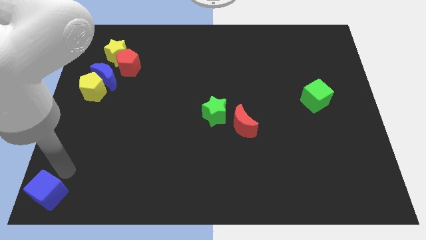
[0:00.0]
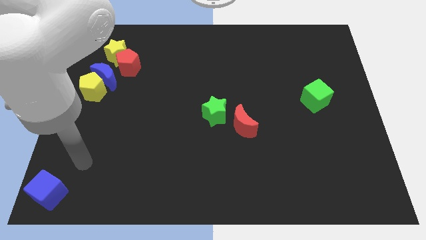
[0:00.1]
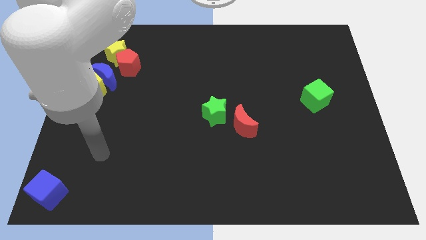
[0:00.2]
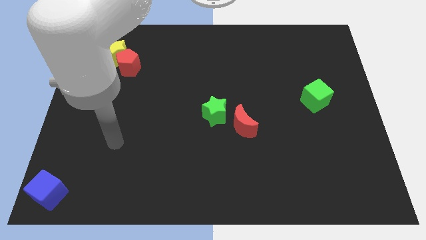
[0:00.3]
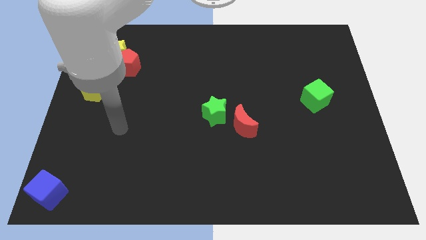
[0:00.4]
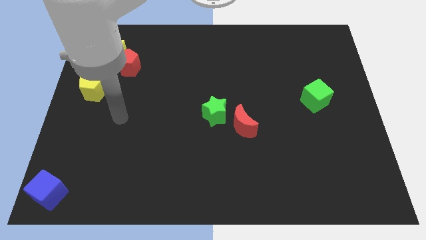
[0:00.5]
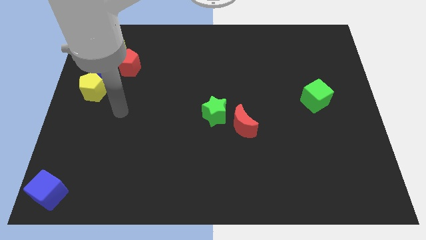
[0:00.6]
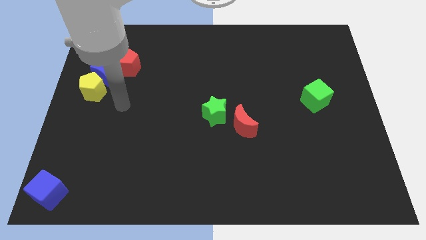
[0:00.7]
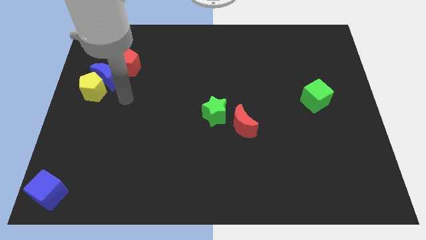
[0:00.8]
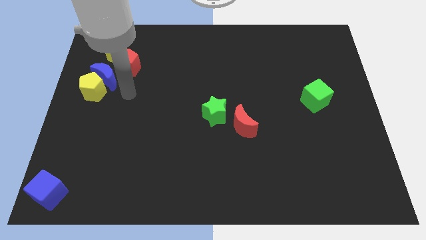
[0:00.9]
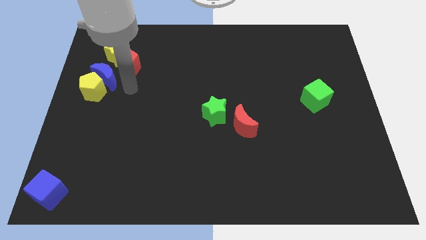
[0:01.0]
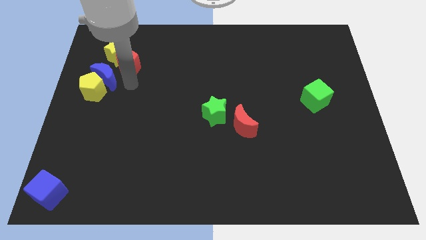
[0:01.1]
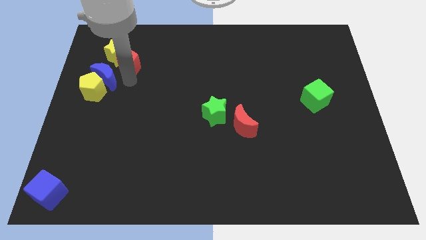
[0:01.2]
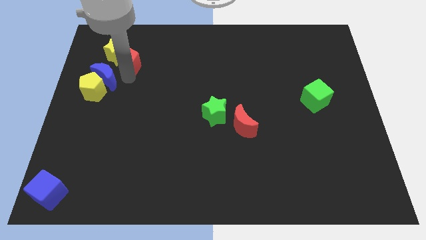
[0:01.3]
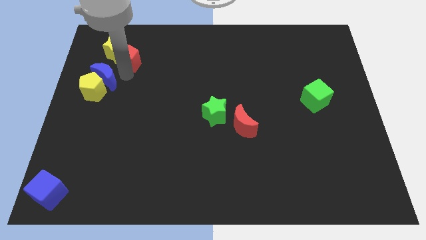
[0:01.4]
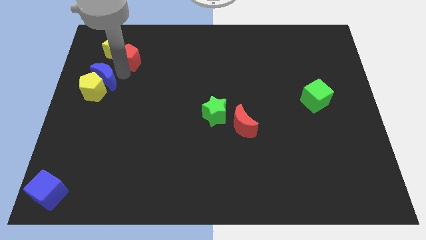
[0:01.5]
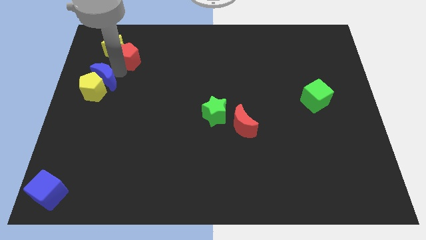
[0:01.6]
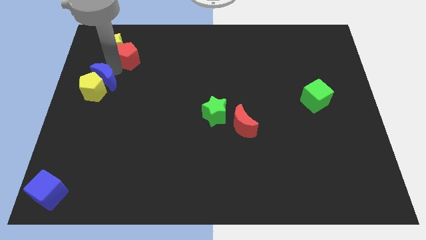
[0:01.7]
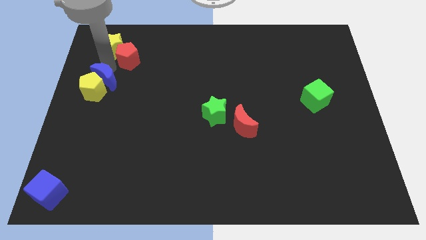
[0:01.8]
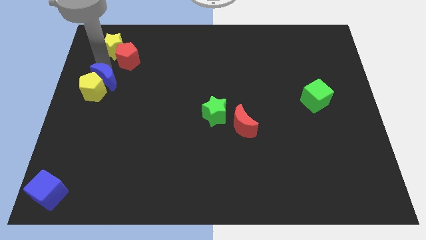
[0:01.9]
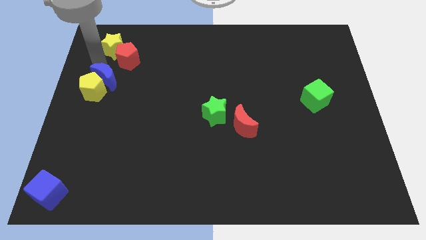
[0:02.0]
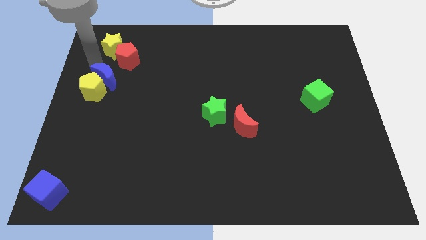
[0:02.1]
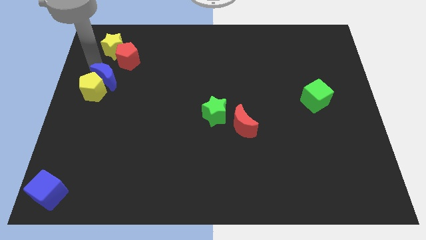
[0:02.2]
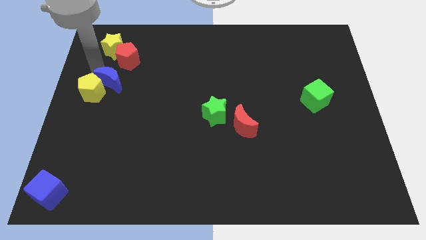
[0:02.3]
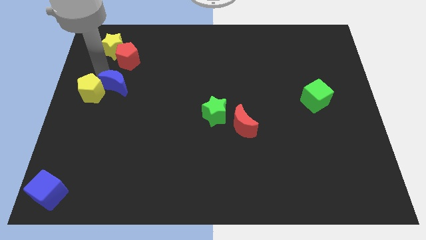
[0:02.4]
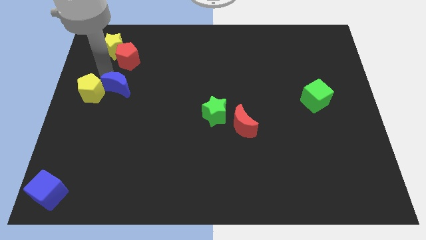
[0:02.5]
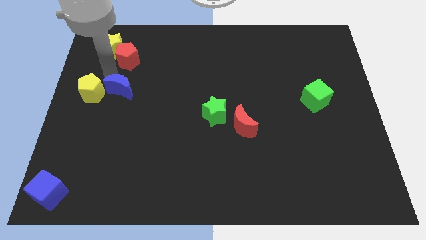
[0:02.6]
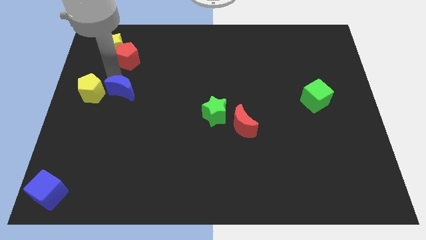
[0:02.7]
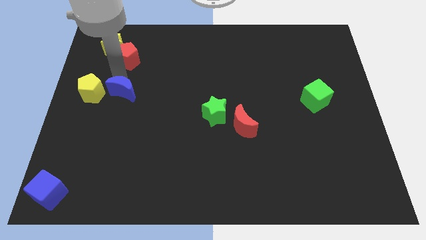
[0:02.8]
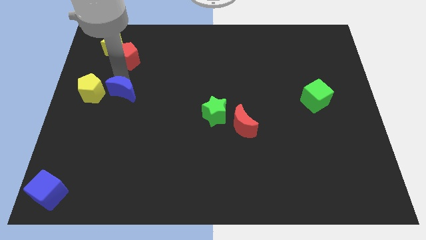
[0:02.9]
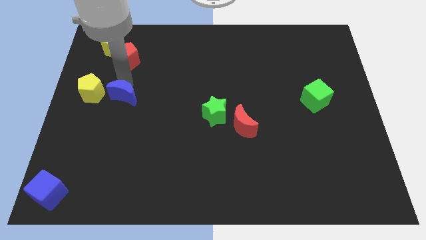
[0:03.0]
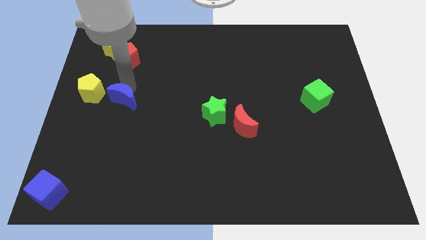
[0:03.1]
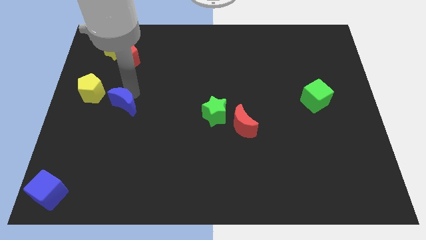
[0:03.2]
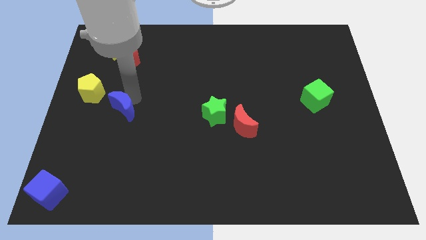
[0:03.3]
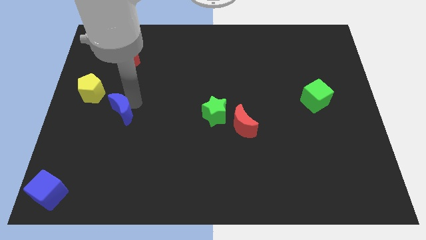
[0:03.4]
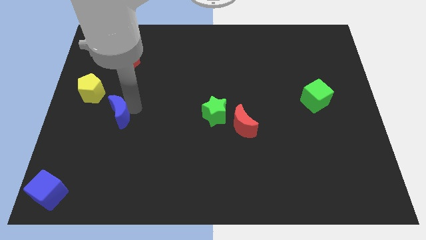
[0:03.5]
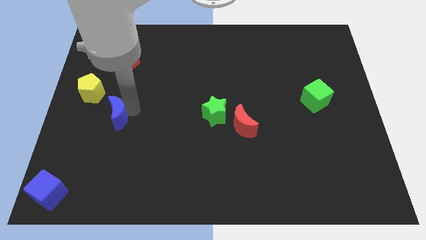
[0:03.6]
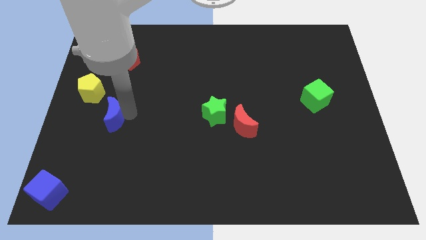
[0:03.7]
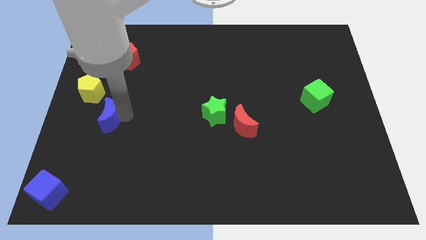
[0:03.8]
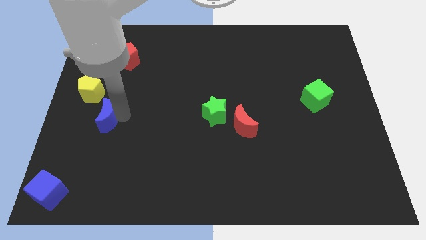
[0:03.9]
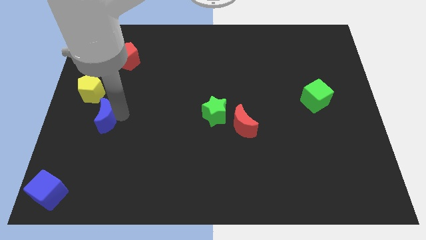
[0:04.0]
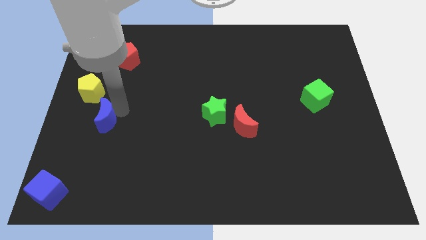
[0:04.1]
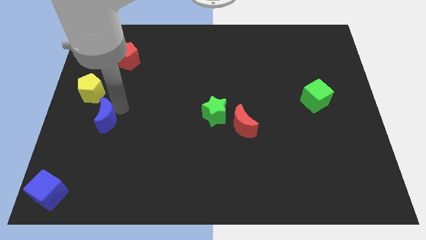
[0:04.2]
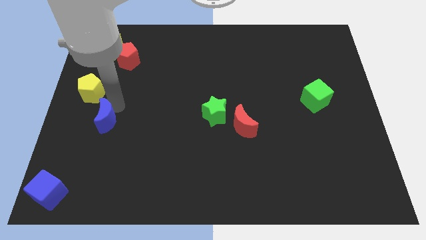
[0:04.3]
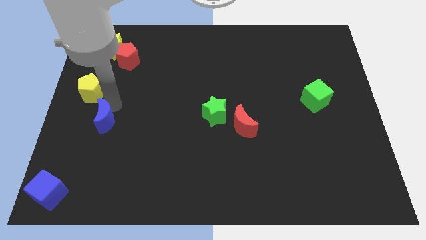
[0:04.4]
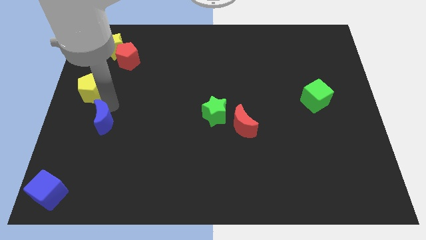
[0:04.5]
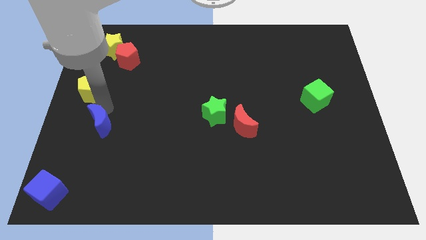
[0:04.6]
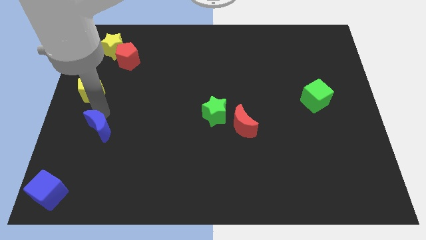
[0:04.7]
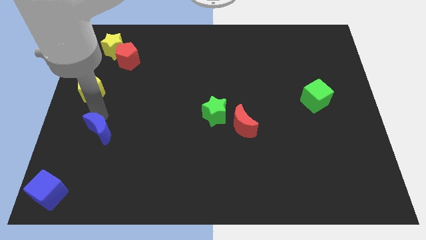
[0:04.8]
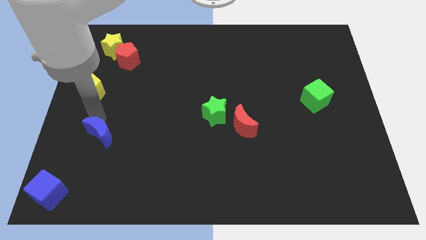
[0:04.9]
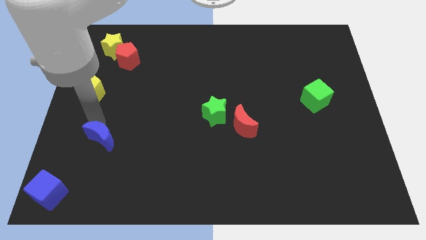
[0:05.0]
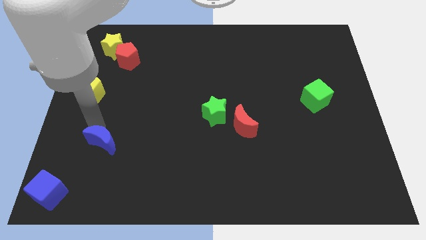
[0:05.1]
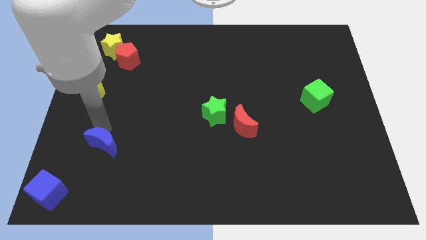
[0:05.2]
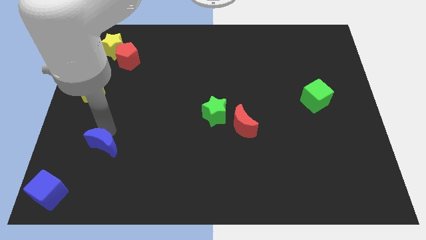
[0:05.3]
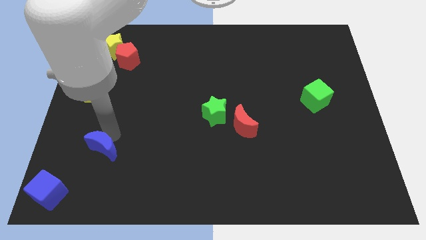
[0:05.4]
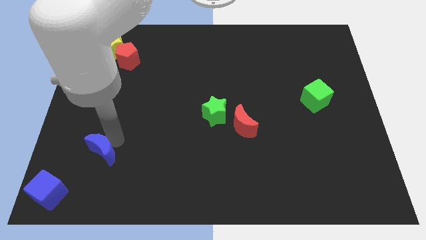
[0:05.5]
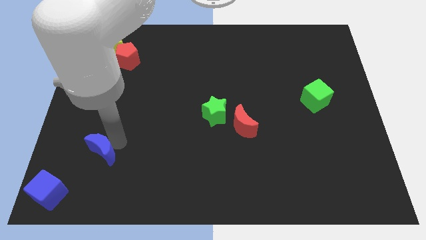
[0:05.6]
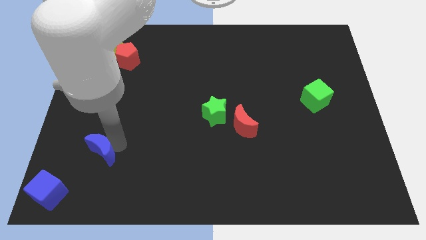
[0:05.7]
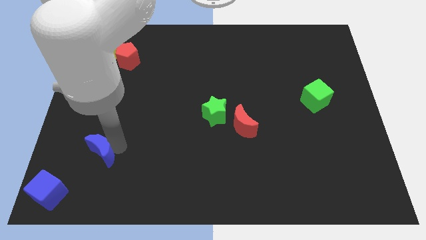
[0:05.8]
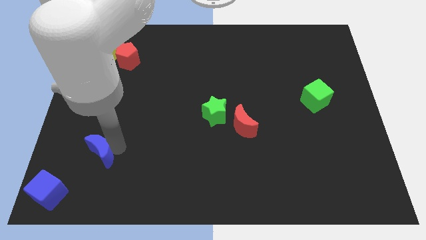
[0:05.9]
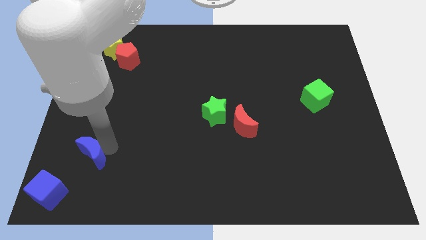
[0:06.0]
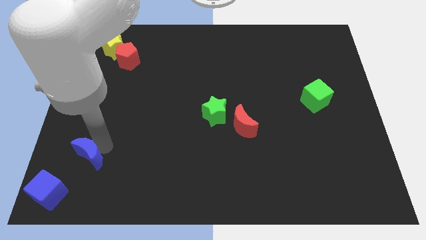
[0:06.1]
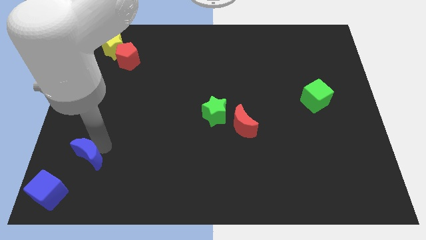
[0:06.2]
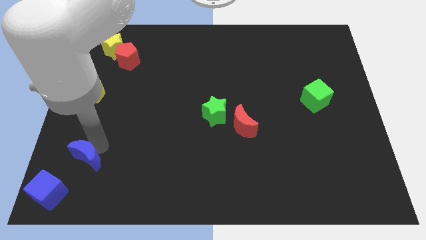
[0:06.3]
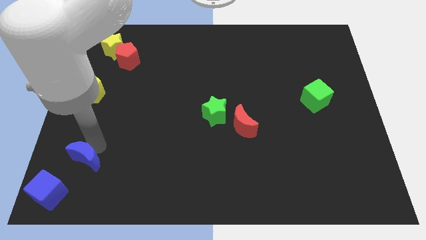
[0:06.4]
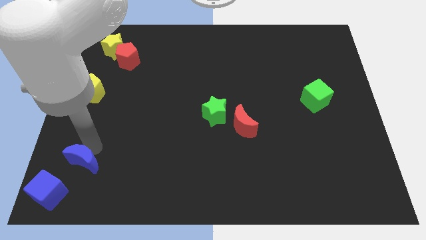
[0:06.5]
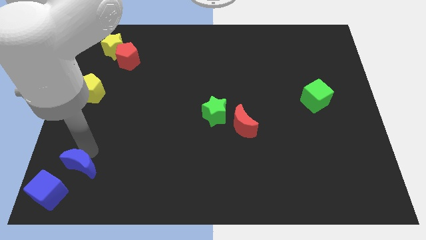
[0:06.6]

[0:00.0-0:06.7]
push the blue crescent towards the blue cube

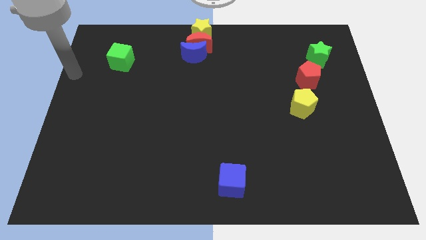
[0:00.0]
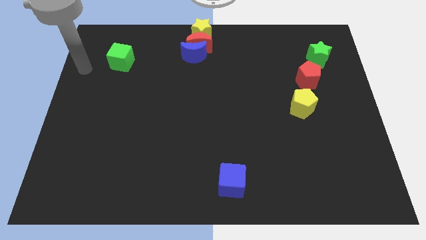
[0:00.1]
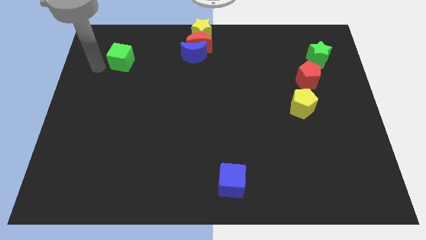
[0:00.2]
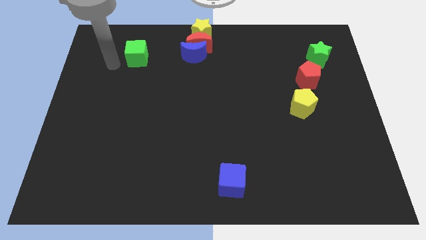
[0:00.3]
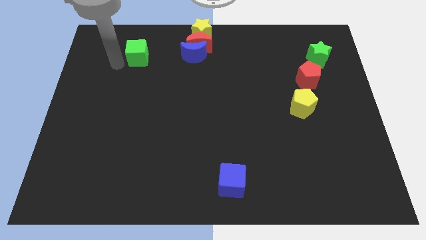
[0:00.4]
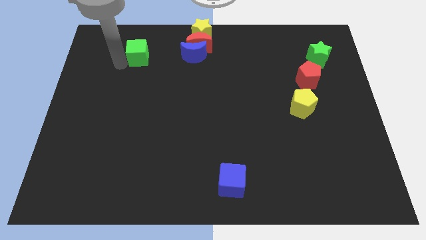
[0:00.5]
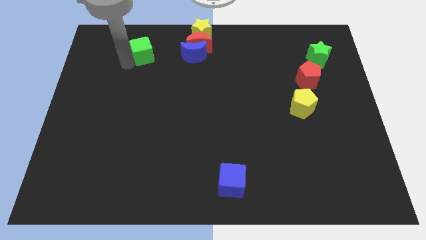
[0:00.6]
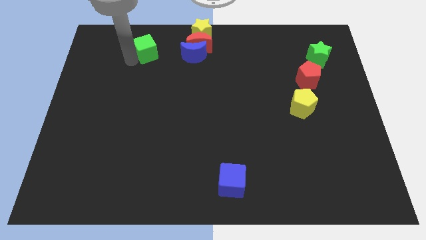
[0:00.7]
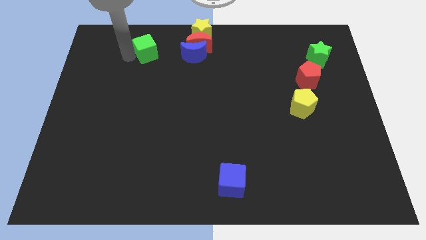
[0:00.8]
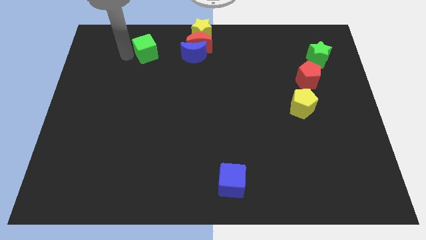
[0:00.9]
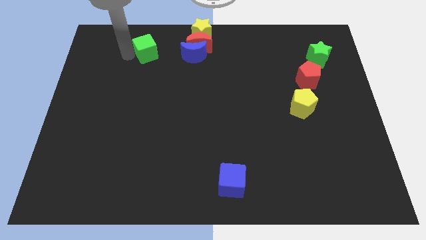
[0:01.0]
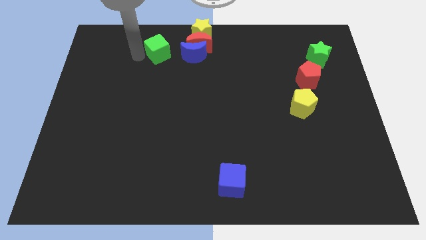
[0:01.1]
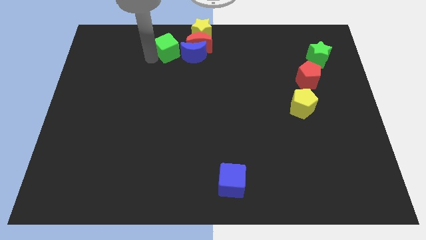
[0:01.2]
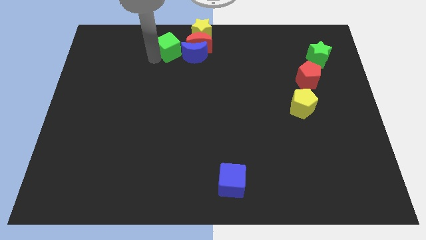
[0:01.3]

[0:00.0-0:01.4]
place the green cube left to the blue moon

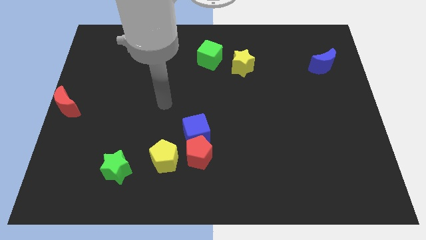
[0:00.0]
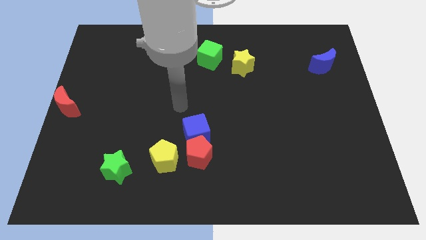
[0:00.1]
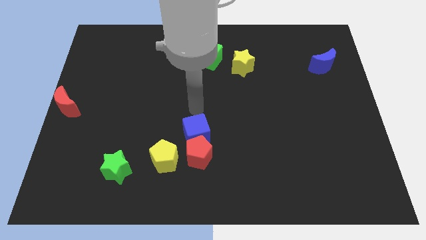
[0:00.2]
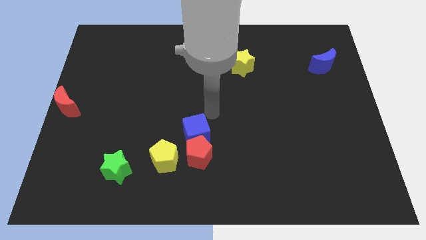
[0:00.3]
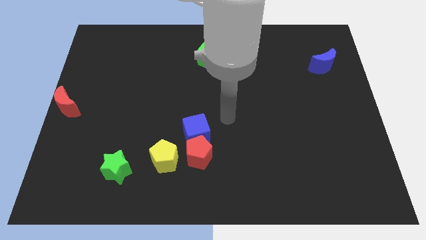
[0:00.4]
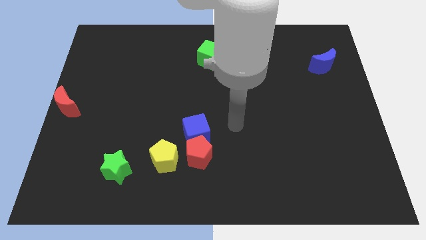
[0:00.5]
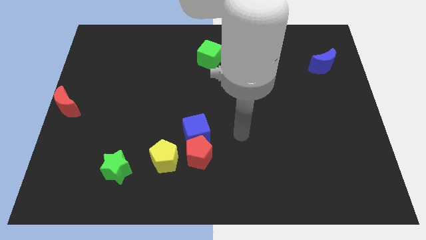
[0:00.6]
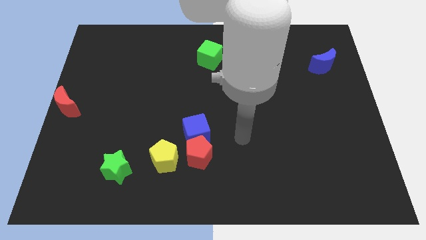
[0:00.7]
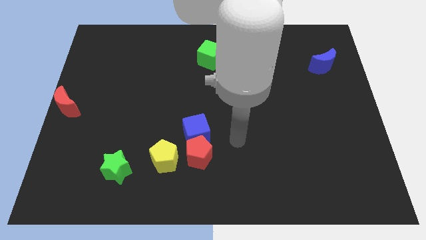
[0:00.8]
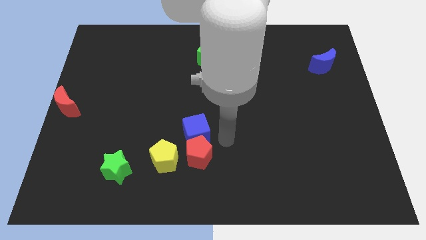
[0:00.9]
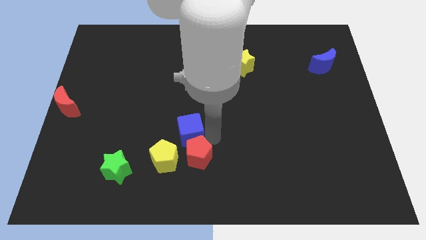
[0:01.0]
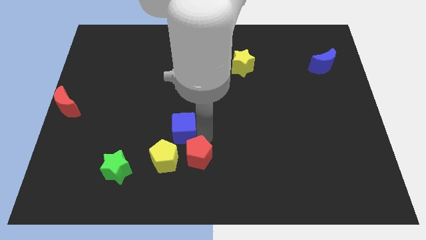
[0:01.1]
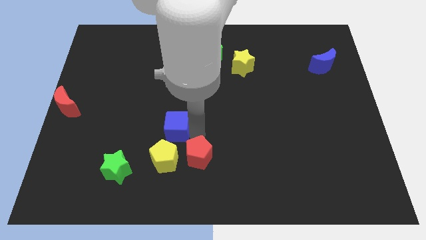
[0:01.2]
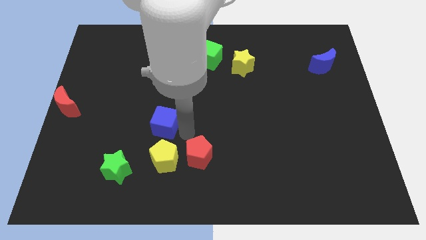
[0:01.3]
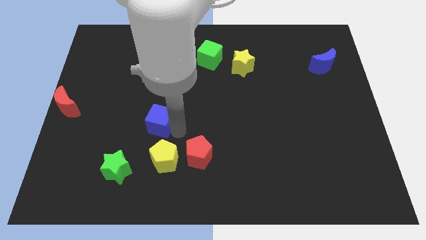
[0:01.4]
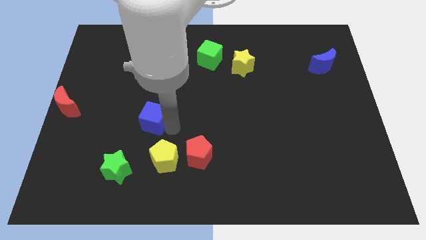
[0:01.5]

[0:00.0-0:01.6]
move the blue cube to the top of the yellow pentagon
